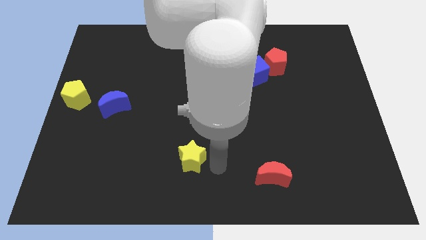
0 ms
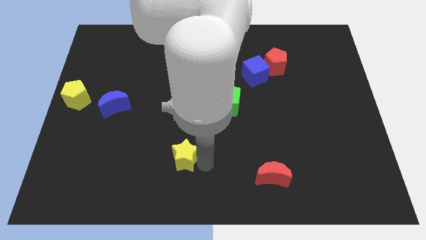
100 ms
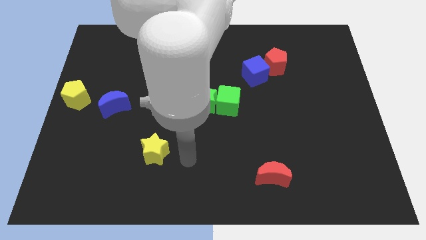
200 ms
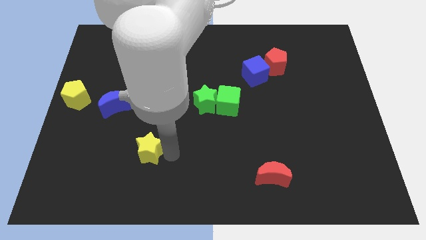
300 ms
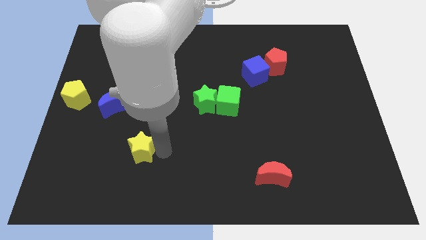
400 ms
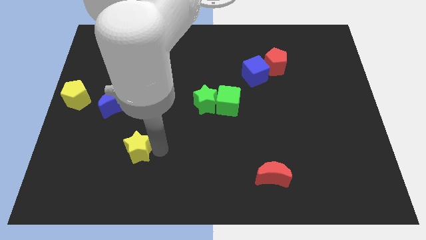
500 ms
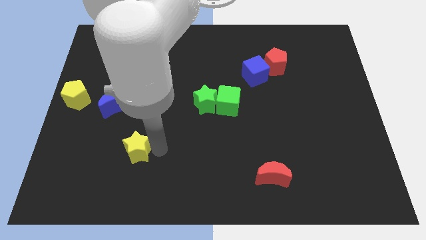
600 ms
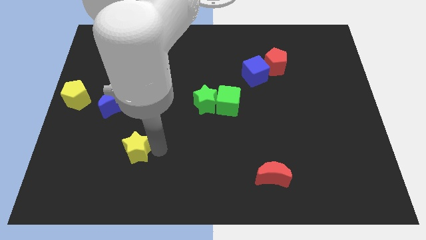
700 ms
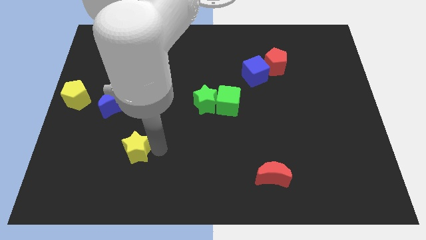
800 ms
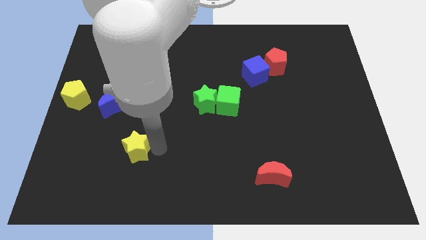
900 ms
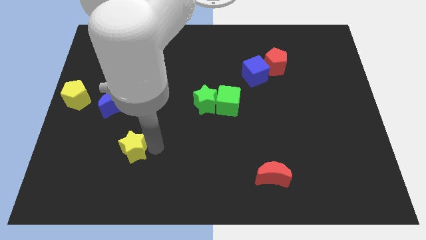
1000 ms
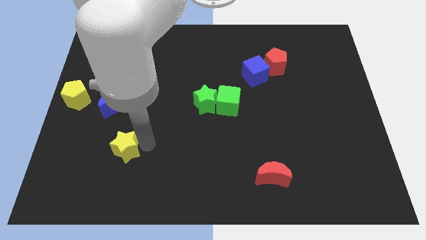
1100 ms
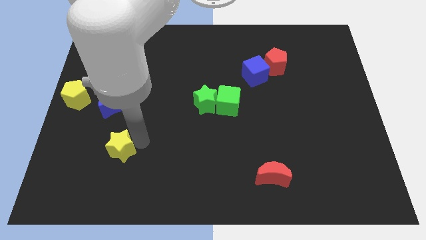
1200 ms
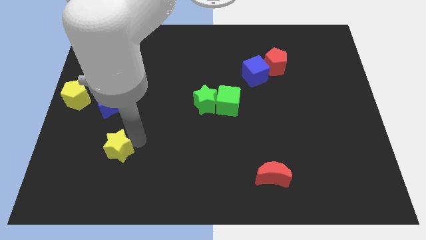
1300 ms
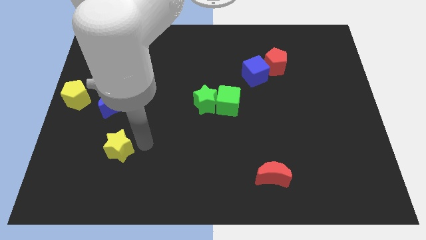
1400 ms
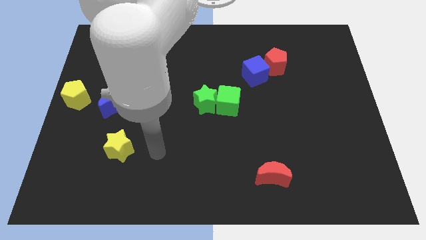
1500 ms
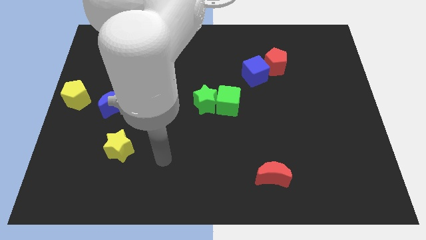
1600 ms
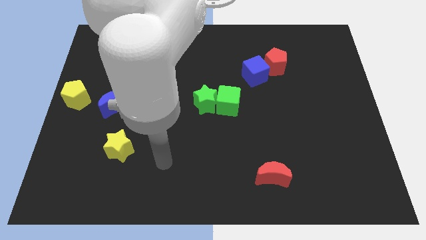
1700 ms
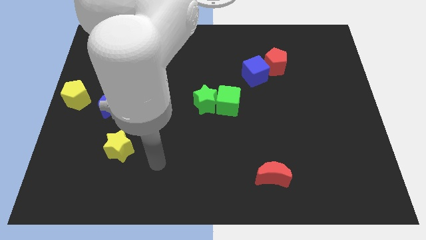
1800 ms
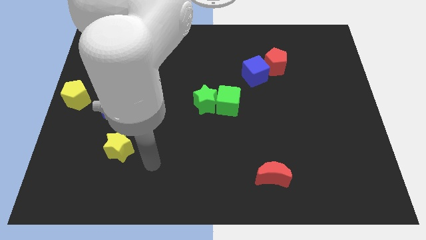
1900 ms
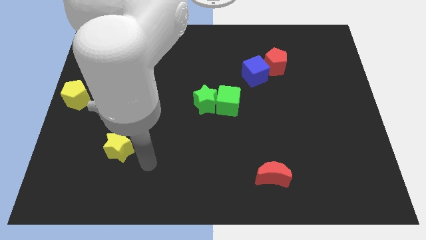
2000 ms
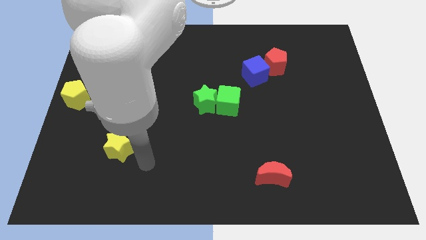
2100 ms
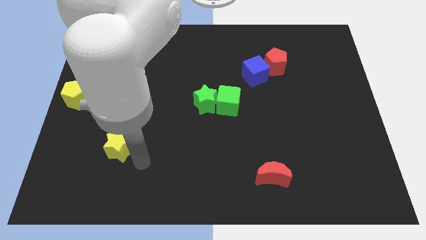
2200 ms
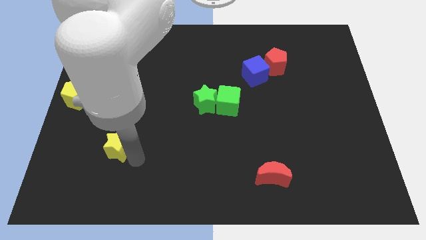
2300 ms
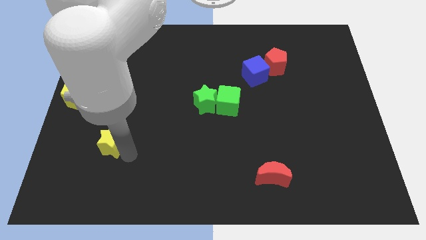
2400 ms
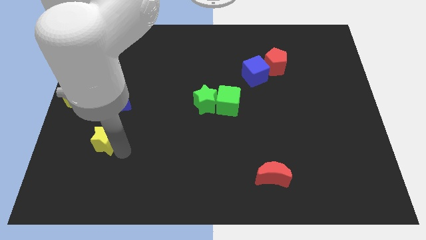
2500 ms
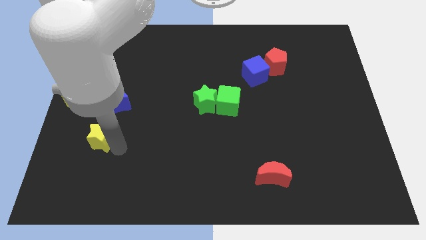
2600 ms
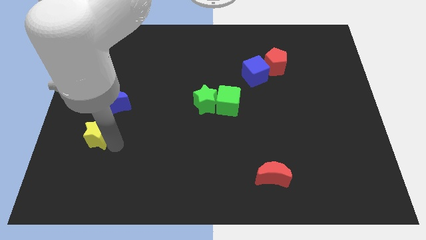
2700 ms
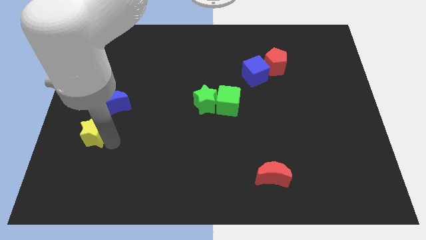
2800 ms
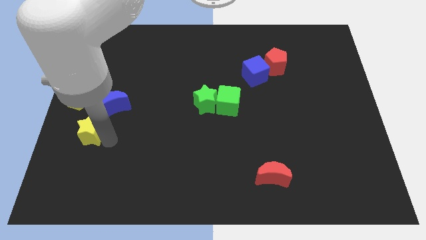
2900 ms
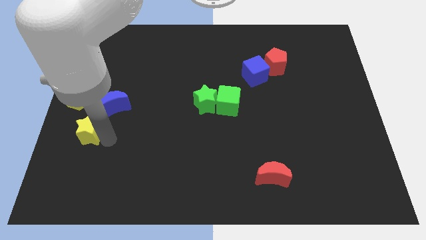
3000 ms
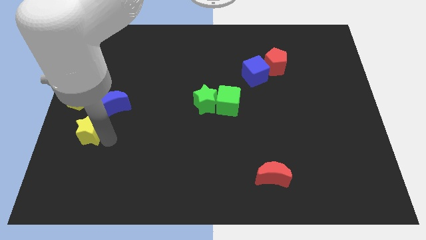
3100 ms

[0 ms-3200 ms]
place the yellow star below the blue crescent

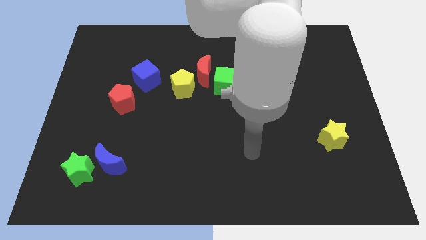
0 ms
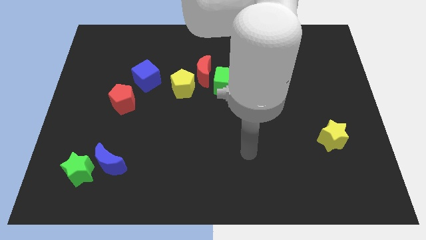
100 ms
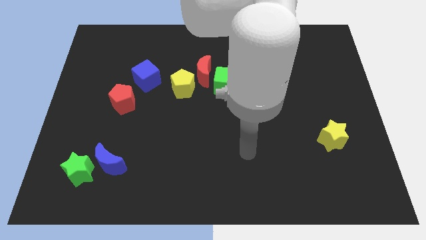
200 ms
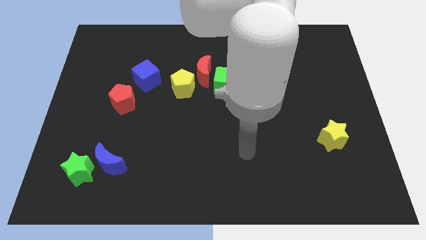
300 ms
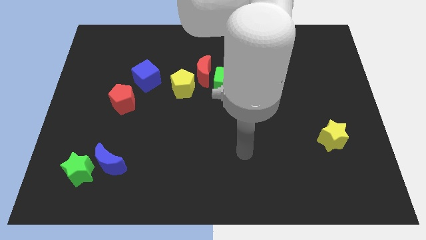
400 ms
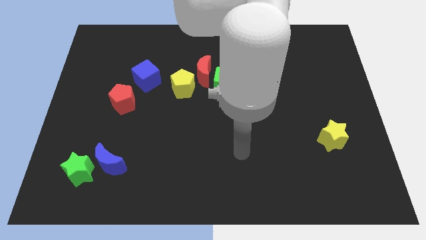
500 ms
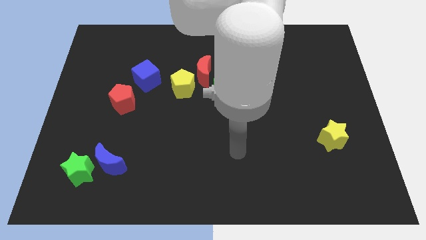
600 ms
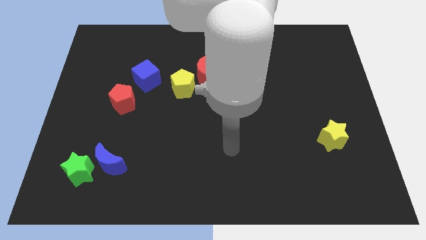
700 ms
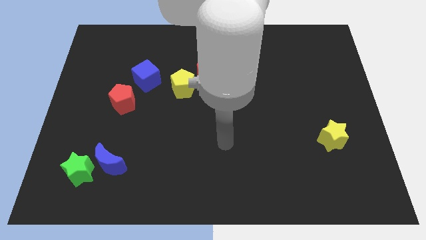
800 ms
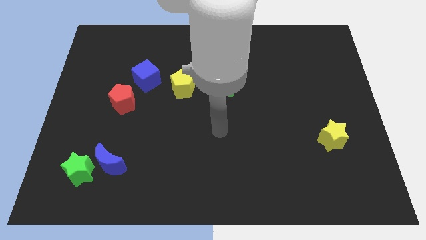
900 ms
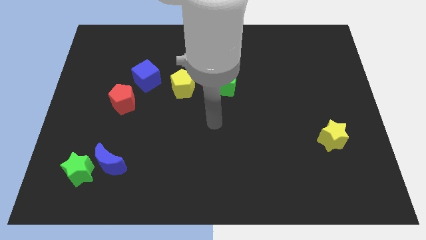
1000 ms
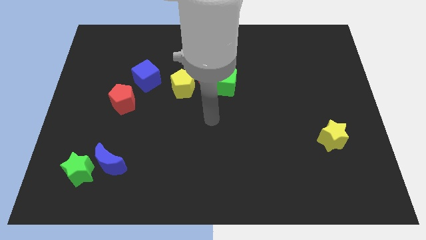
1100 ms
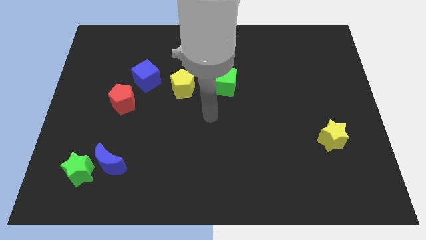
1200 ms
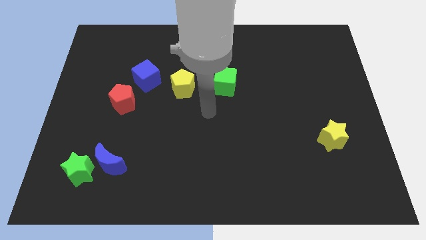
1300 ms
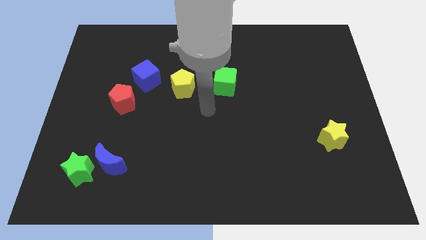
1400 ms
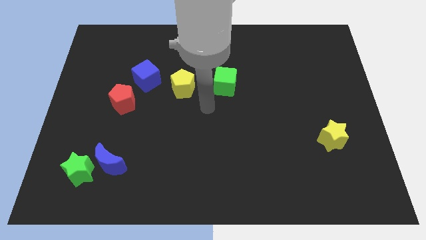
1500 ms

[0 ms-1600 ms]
move your hand towards the green cube

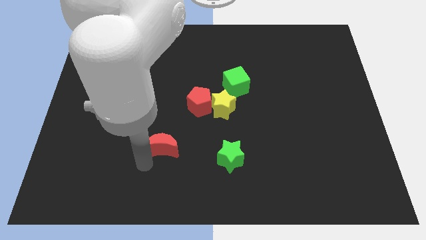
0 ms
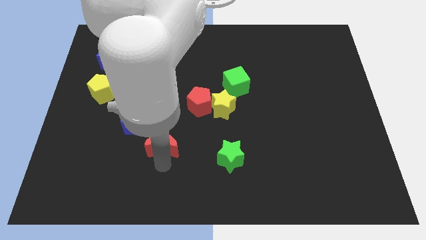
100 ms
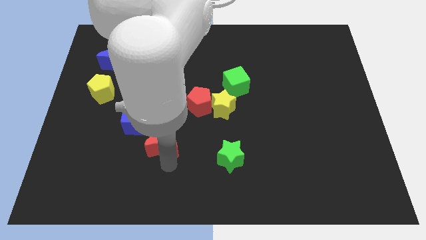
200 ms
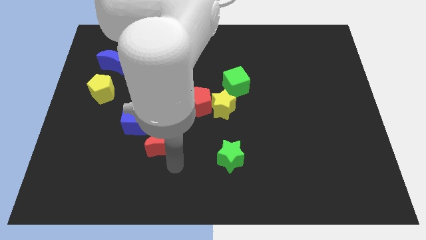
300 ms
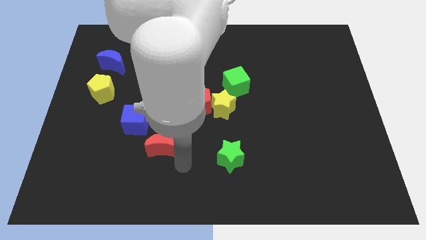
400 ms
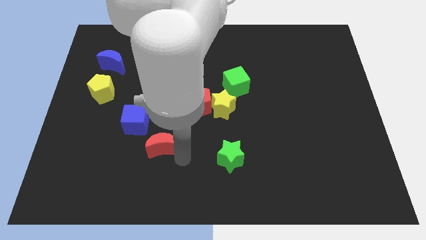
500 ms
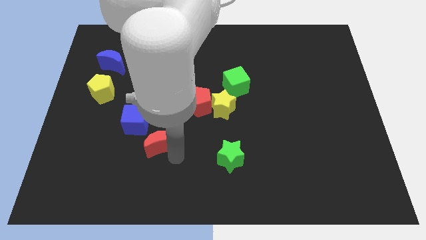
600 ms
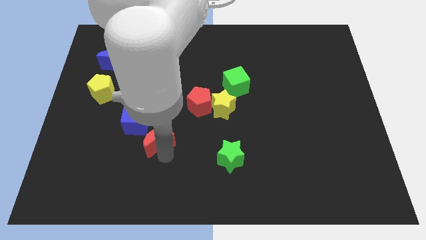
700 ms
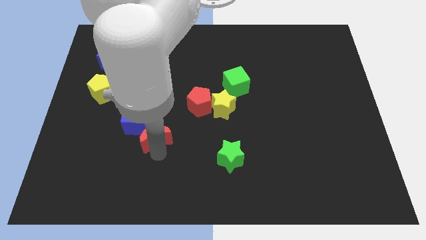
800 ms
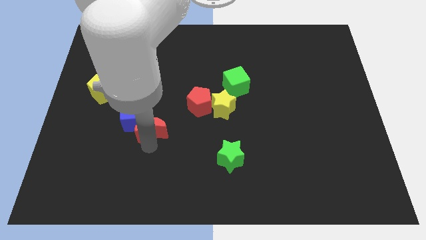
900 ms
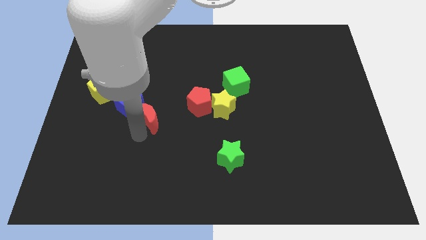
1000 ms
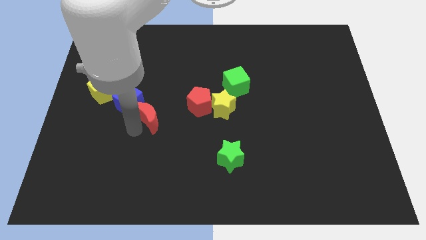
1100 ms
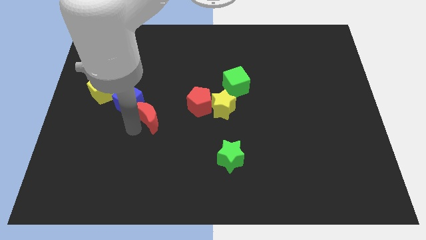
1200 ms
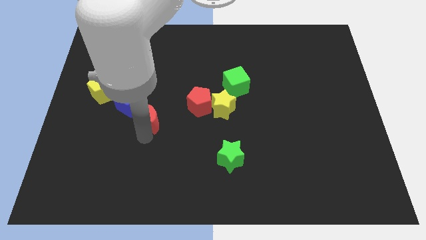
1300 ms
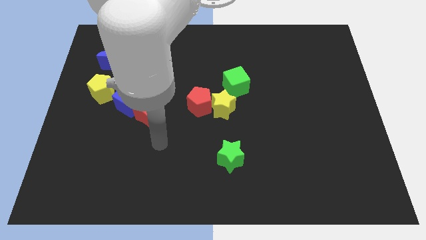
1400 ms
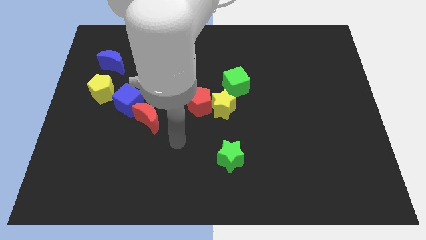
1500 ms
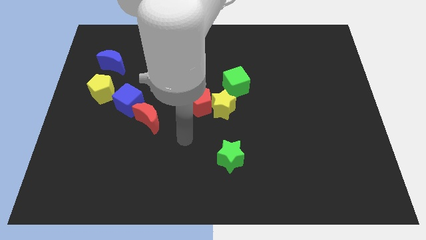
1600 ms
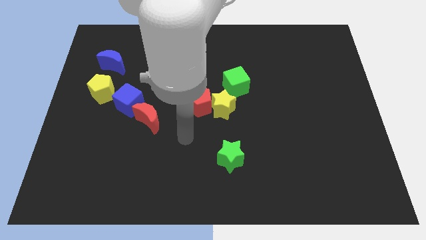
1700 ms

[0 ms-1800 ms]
push the red crescent into the blue cube

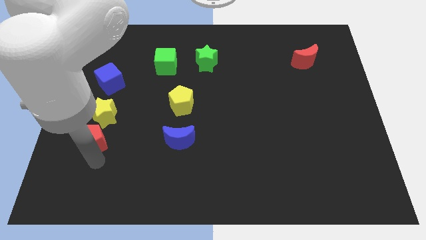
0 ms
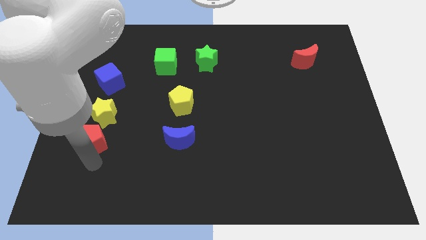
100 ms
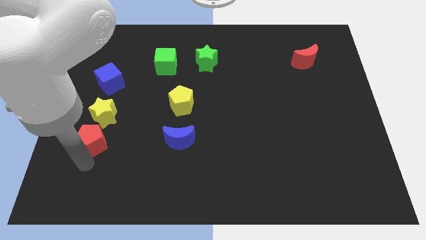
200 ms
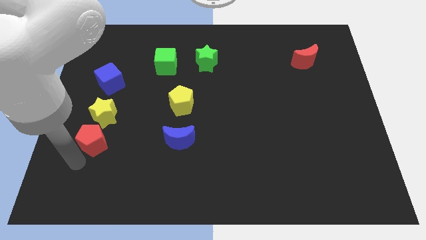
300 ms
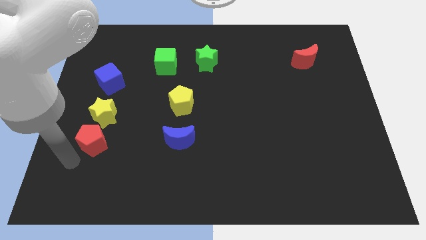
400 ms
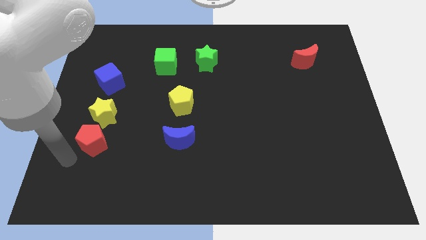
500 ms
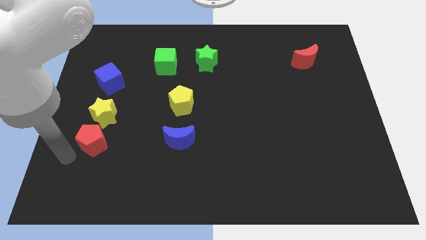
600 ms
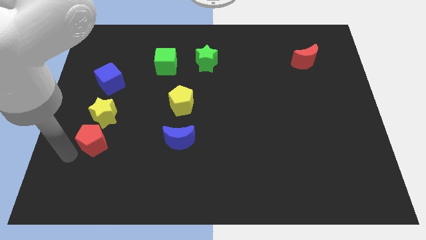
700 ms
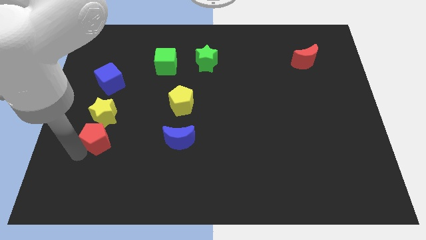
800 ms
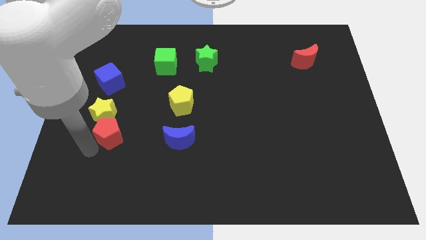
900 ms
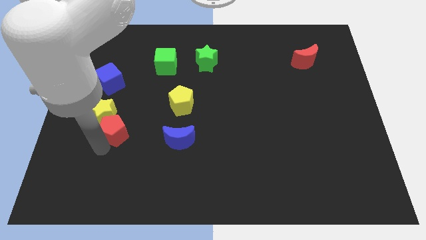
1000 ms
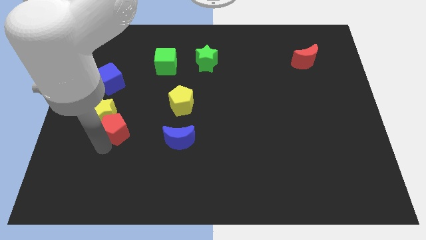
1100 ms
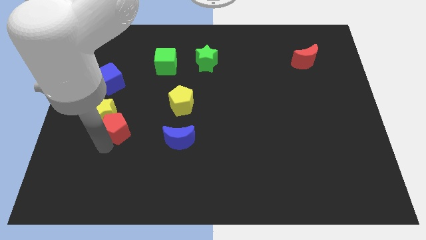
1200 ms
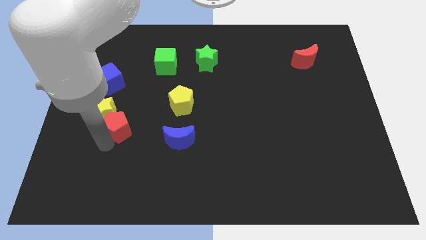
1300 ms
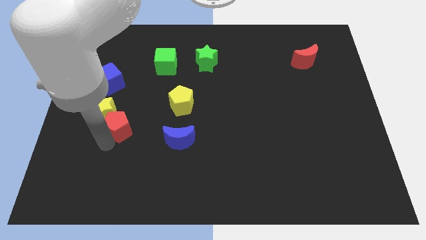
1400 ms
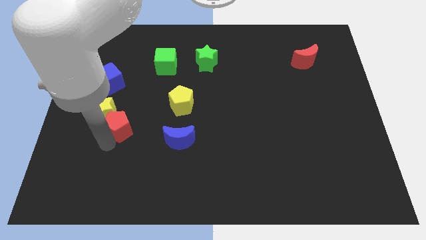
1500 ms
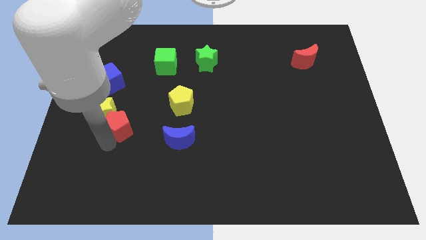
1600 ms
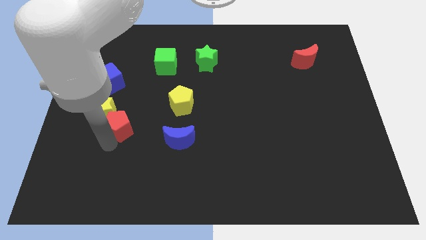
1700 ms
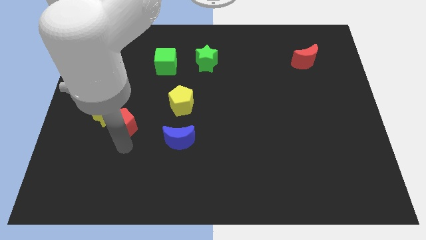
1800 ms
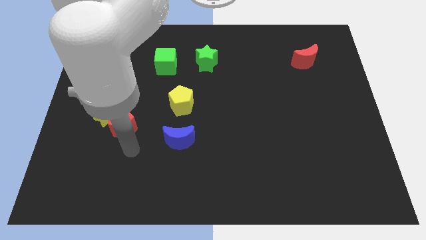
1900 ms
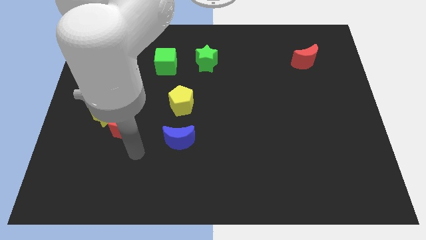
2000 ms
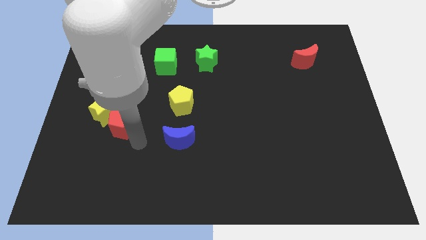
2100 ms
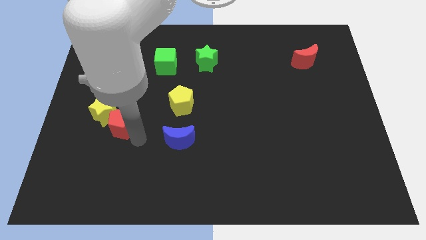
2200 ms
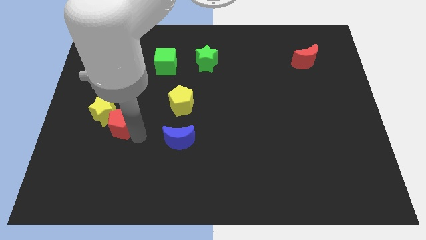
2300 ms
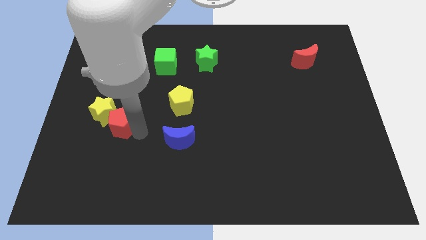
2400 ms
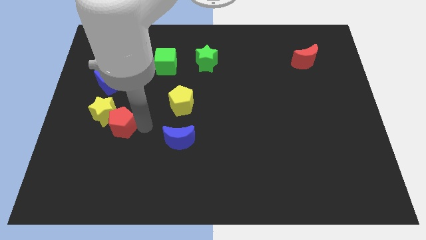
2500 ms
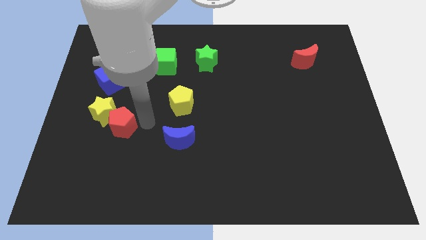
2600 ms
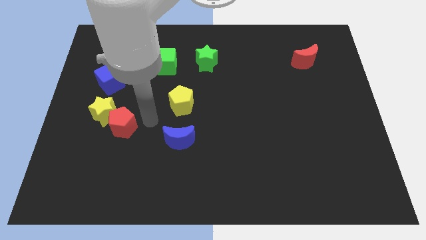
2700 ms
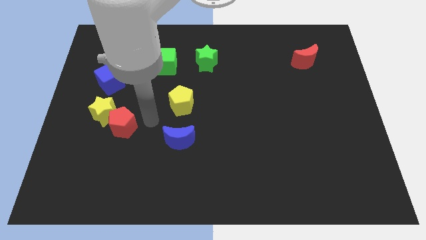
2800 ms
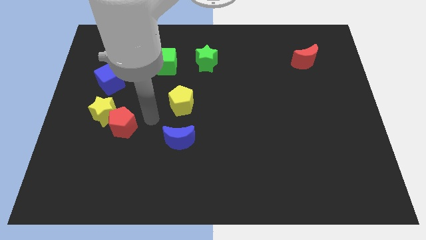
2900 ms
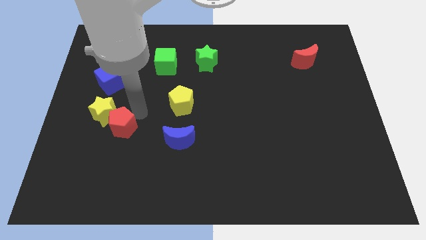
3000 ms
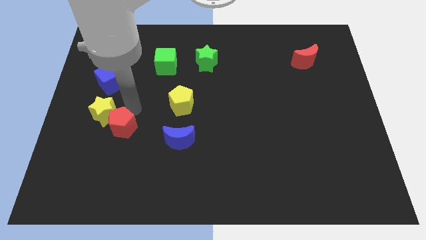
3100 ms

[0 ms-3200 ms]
slightly push the red pentagon upwards
